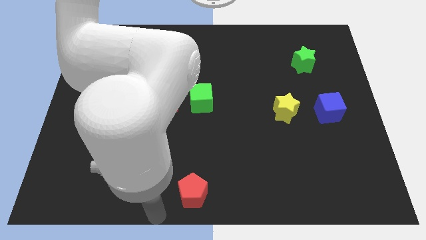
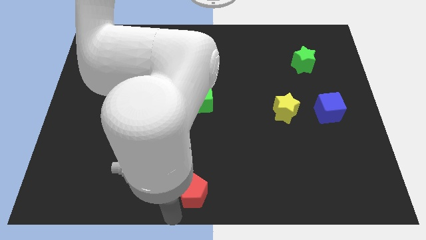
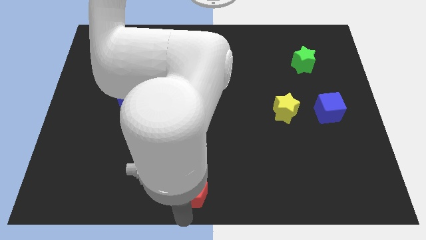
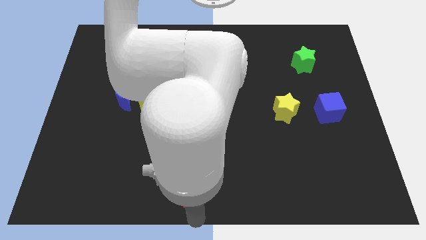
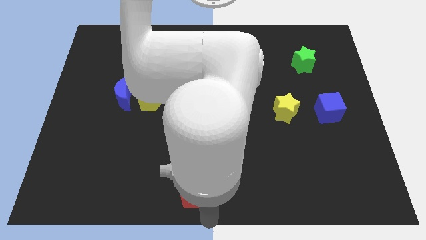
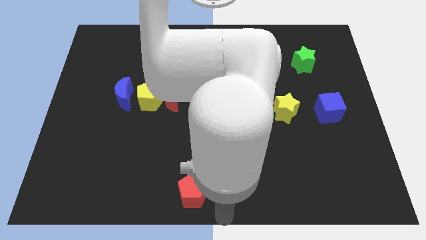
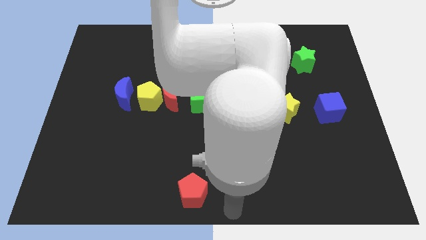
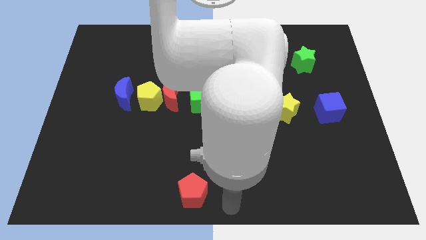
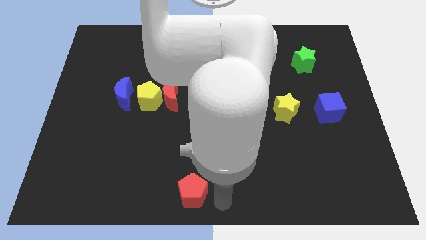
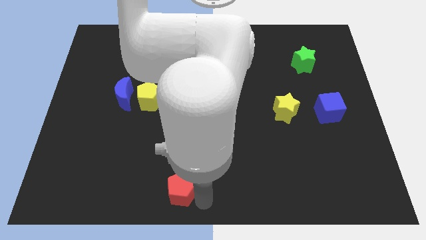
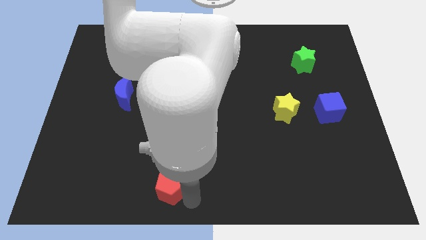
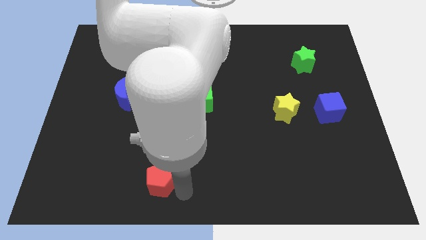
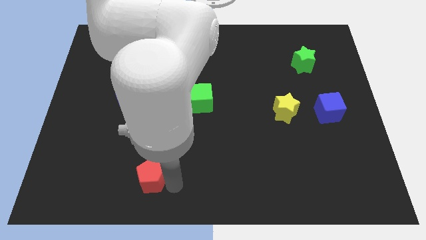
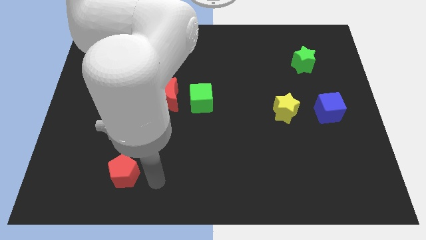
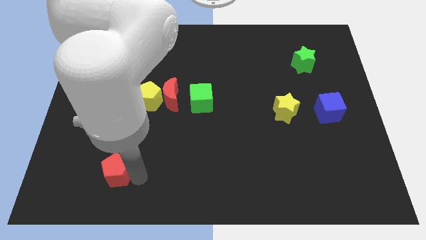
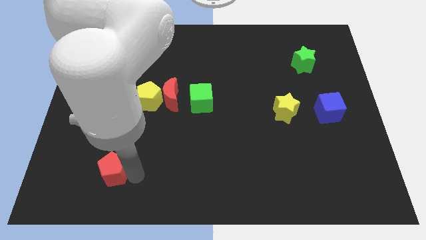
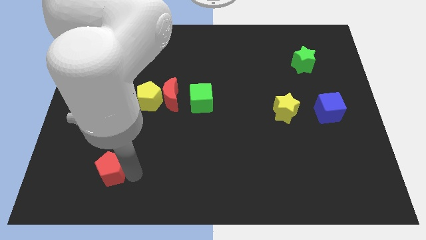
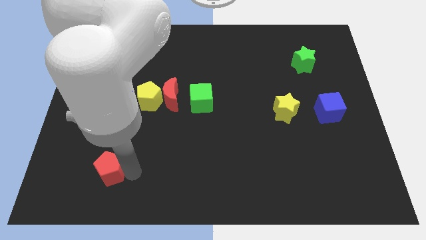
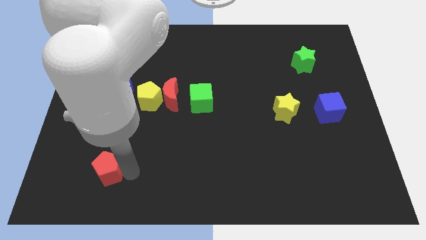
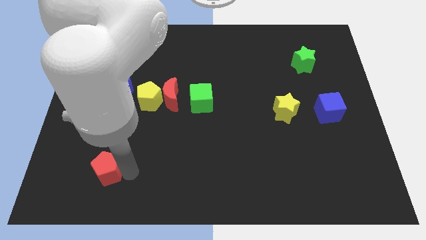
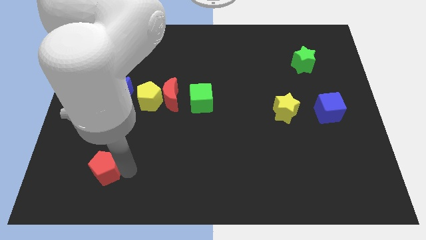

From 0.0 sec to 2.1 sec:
push the red pentagon to the bottom of the blue crescent

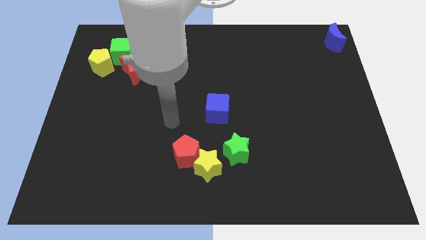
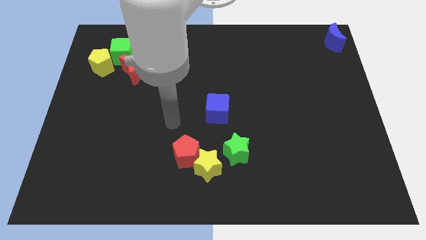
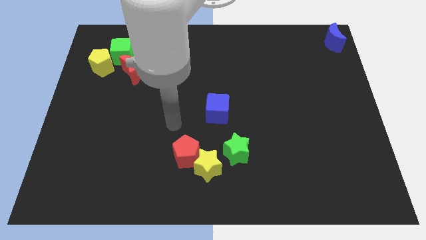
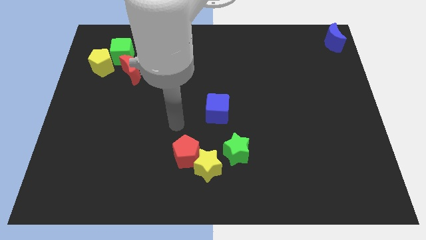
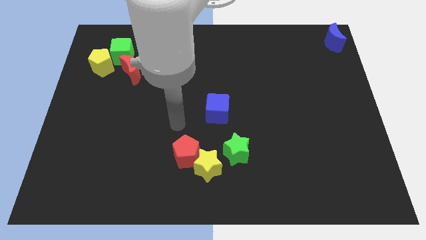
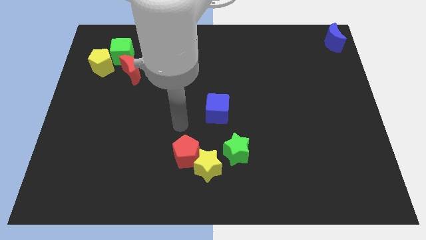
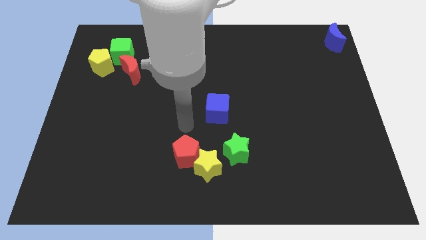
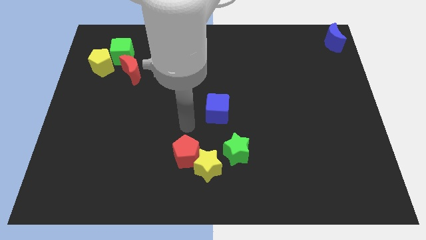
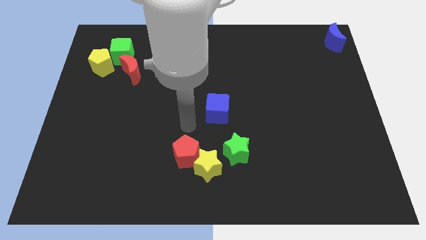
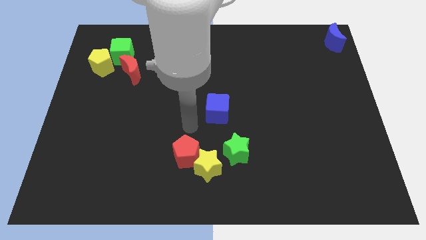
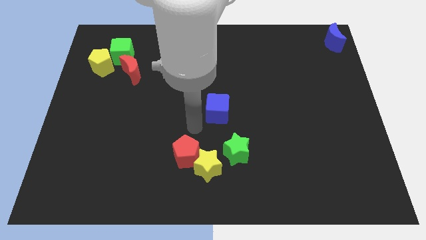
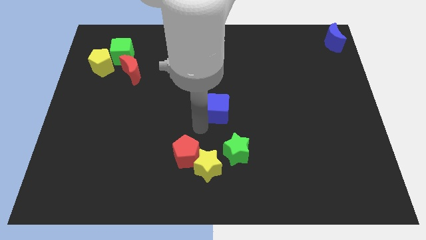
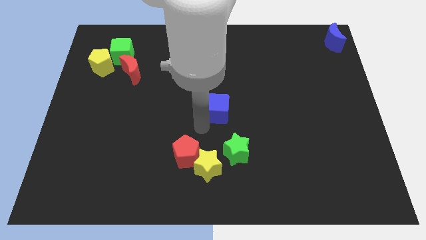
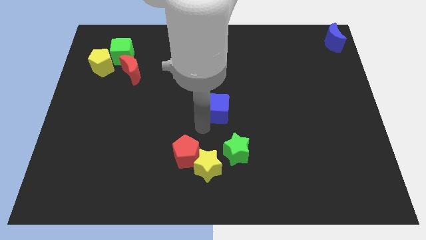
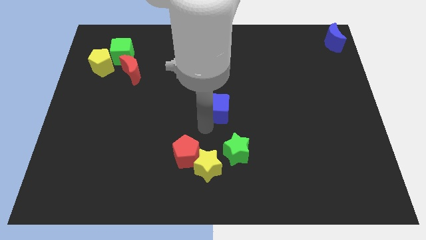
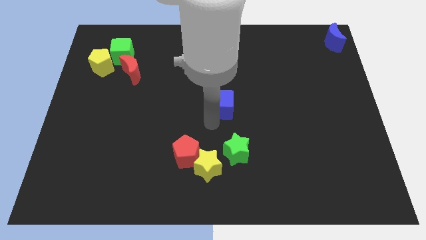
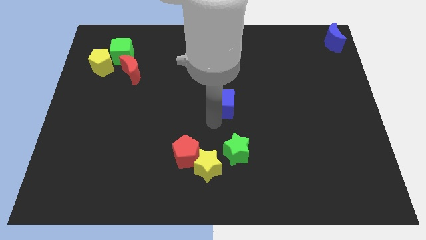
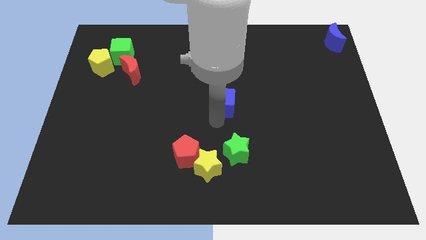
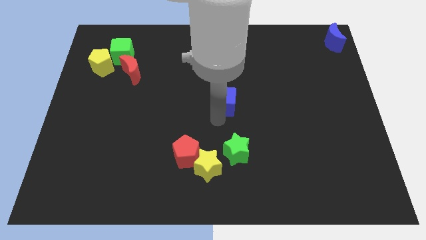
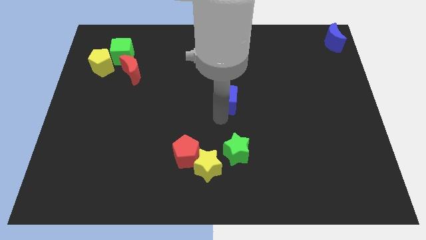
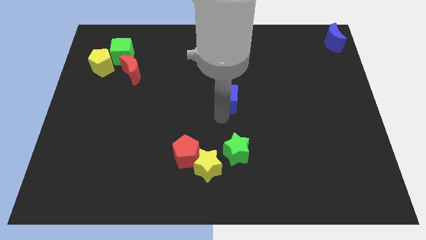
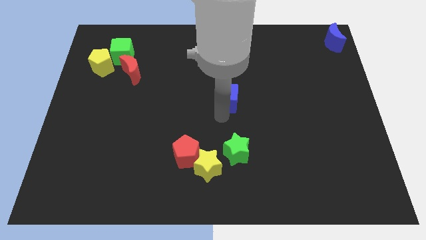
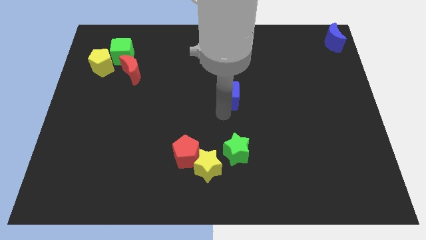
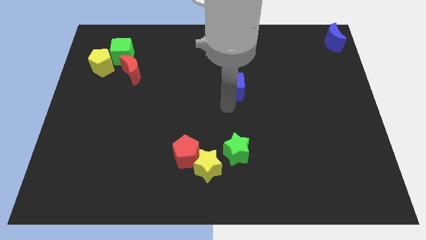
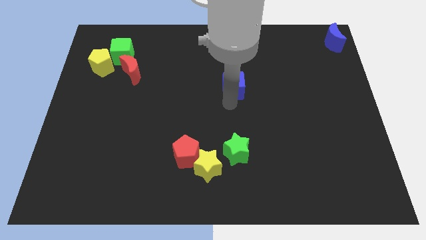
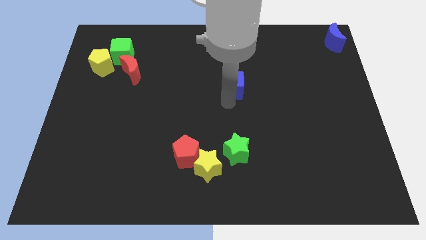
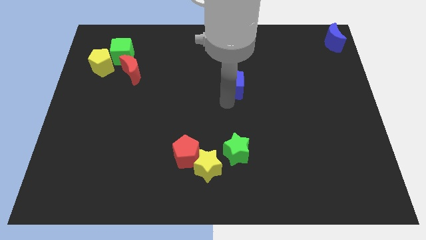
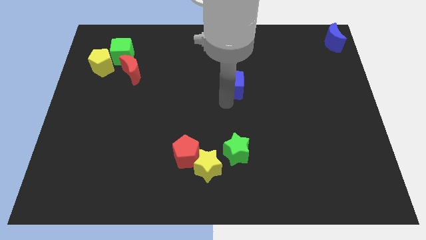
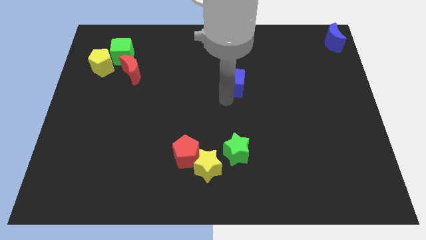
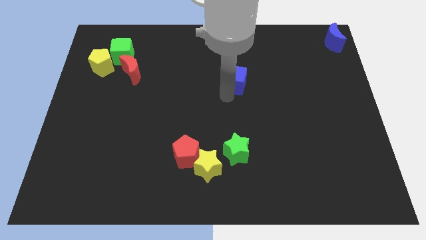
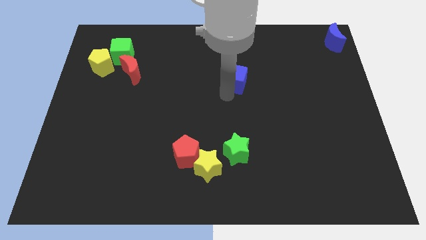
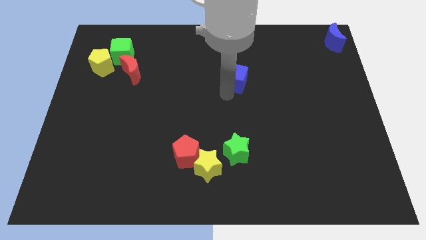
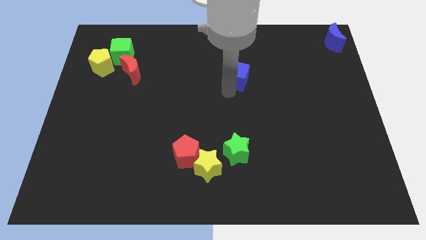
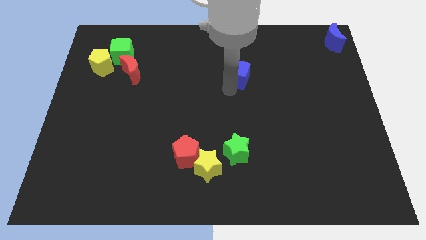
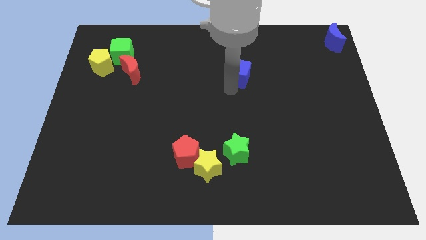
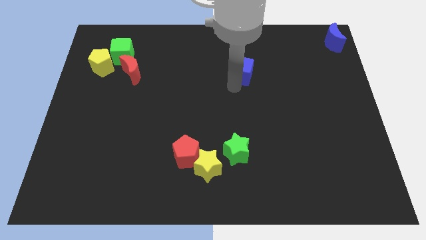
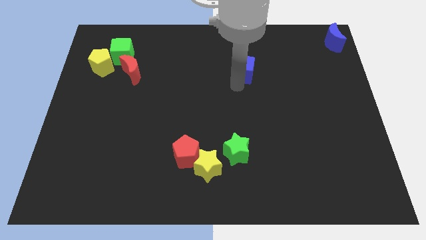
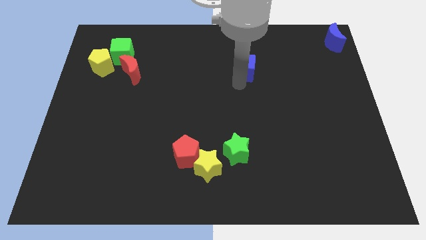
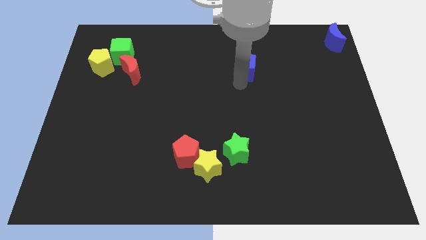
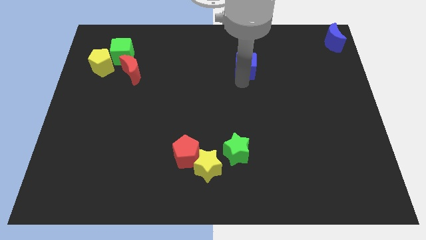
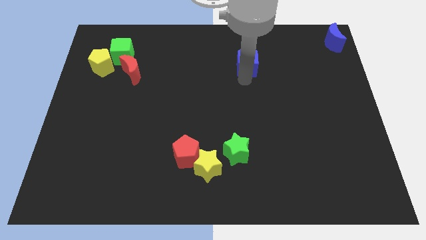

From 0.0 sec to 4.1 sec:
slide blue cube away from the center

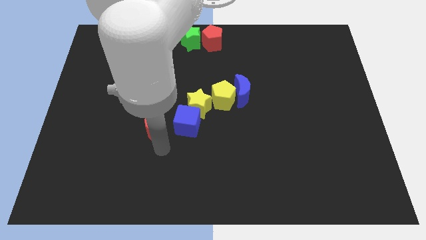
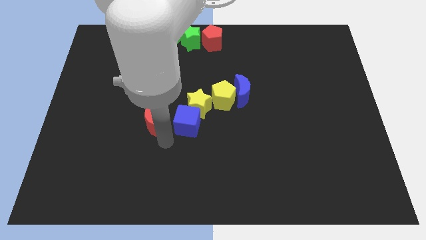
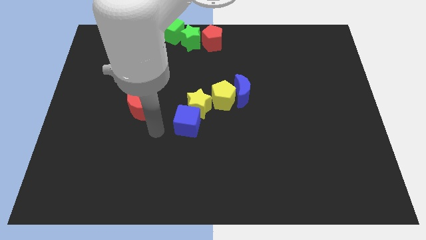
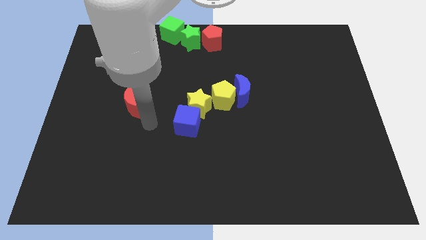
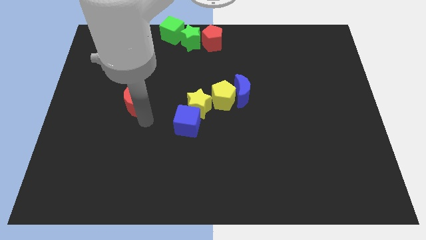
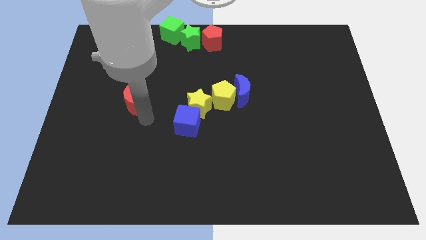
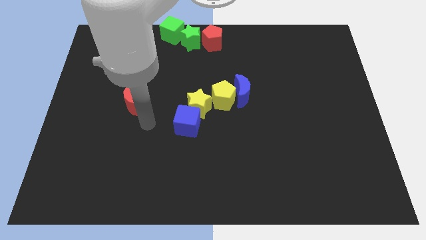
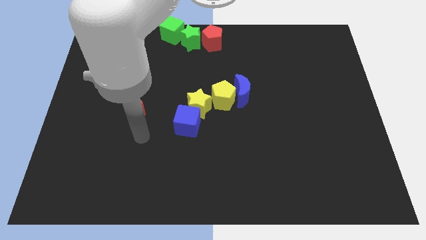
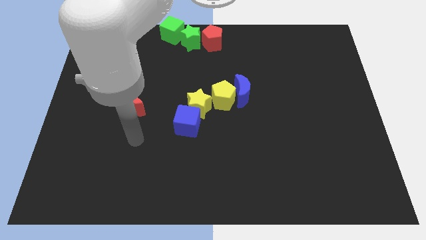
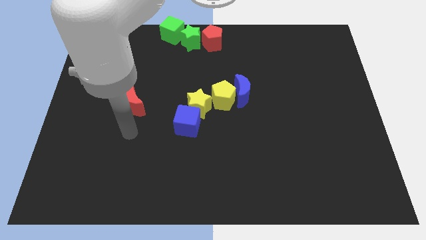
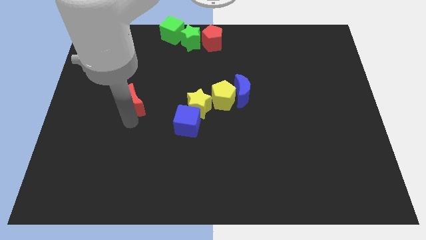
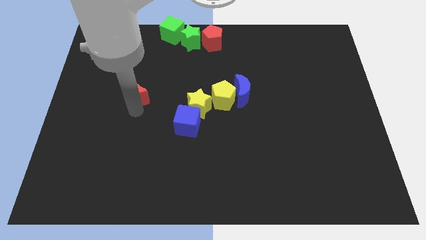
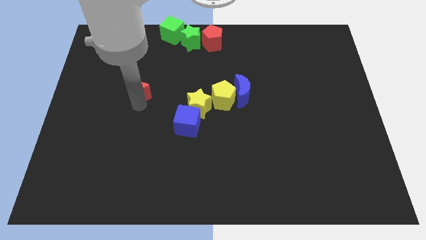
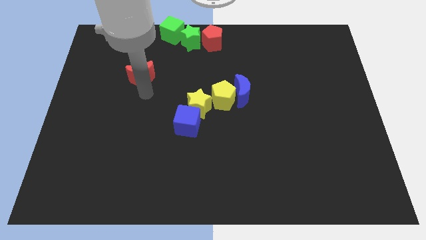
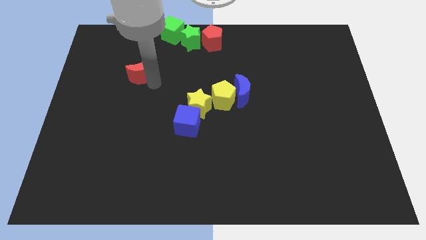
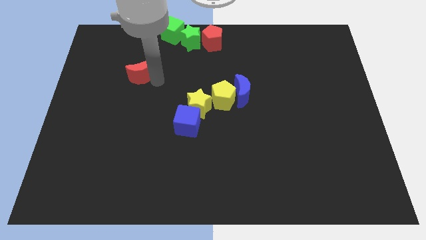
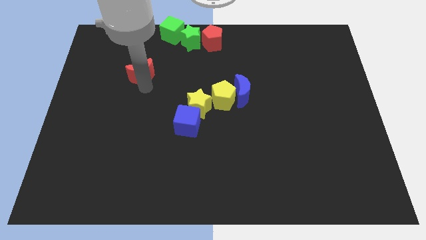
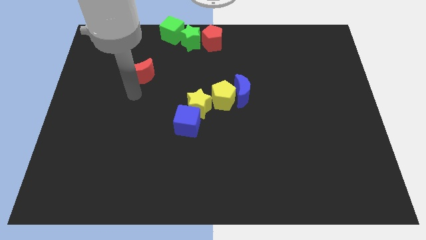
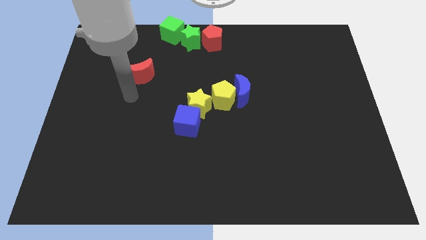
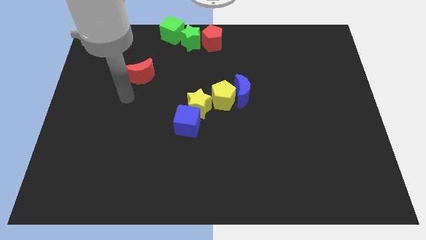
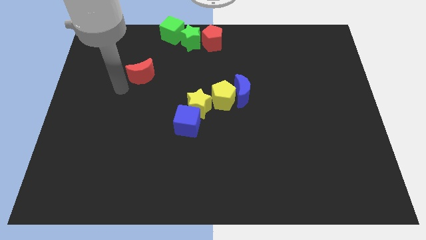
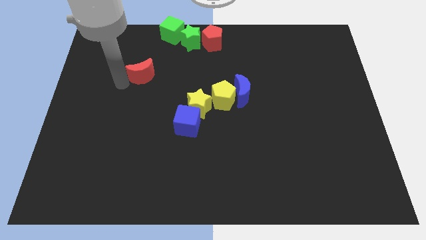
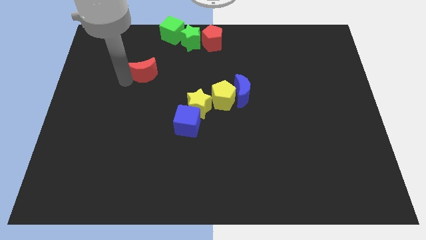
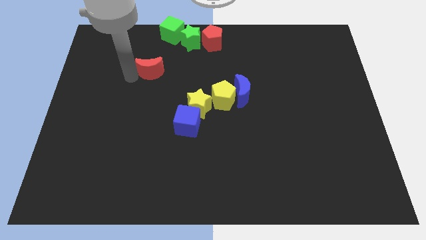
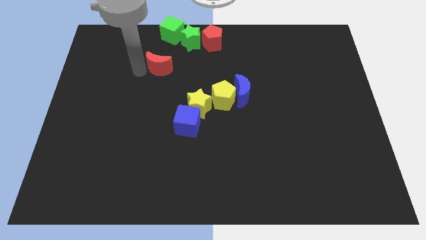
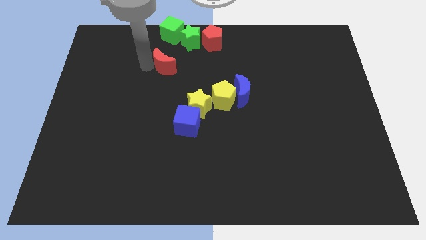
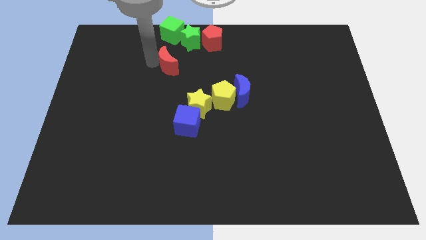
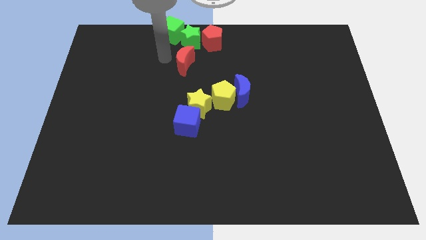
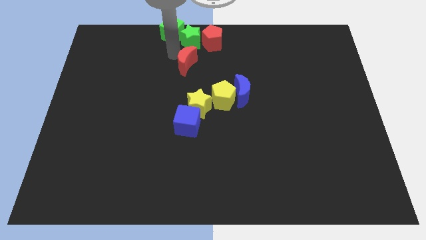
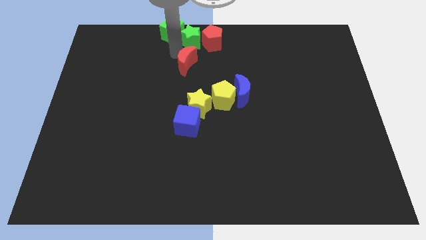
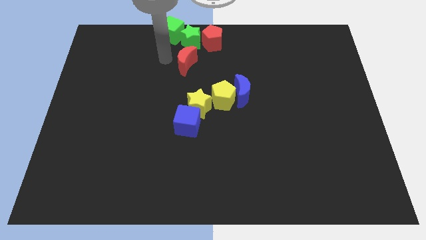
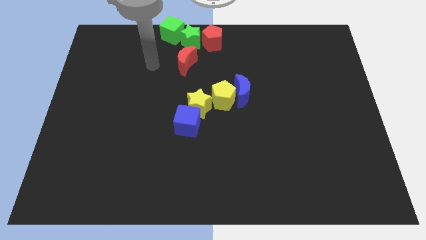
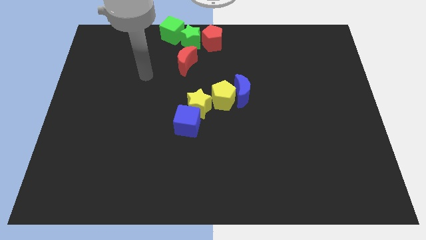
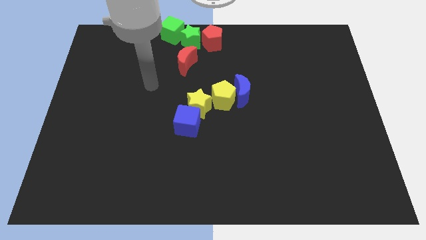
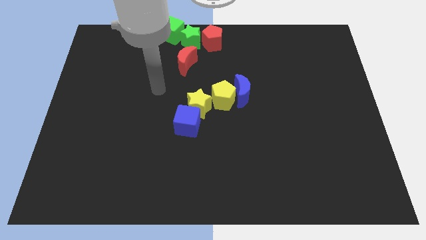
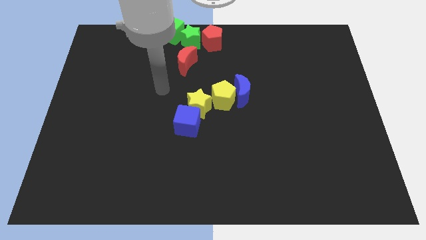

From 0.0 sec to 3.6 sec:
place red moon at the bottom of the green star
